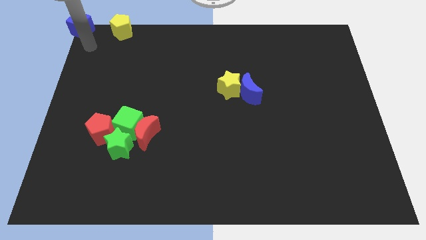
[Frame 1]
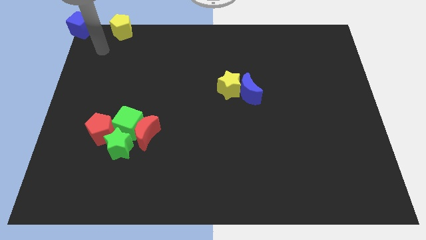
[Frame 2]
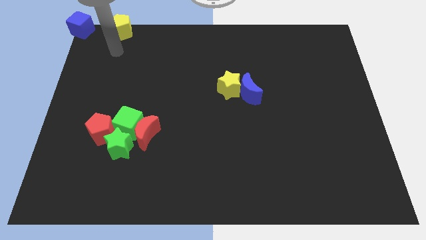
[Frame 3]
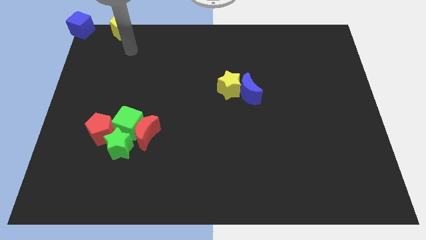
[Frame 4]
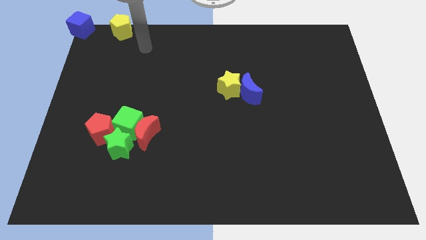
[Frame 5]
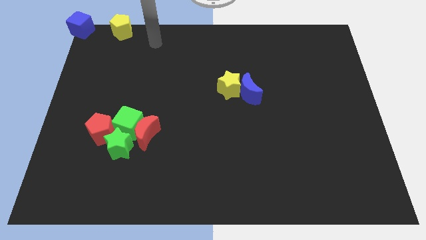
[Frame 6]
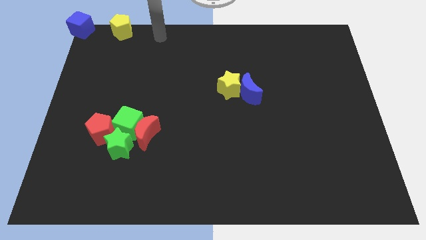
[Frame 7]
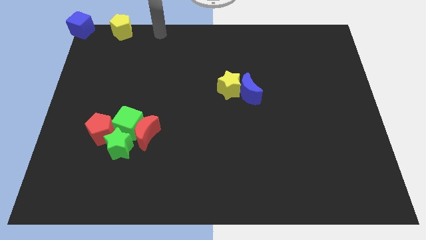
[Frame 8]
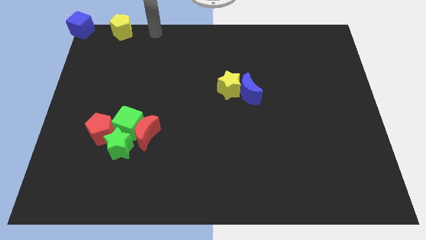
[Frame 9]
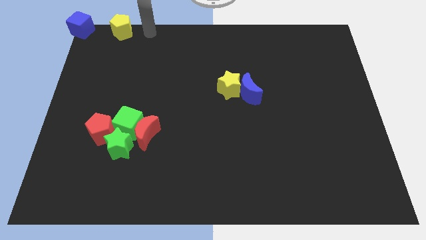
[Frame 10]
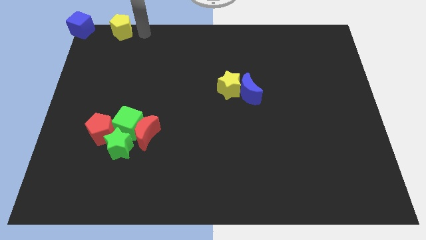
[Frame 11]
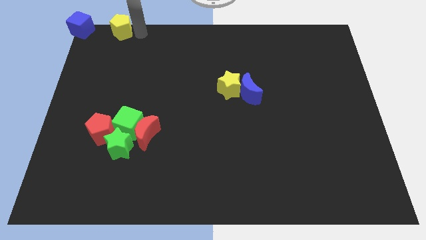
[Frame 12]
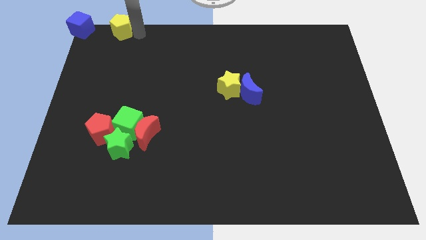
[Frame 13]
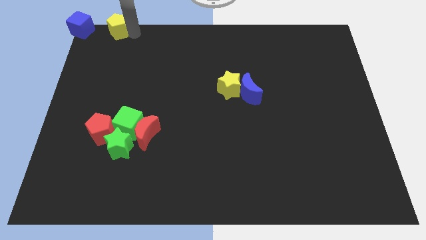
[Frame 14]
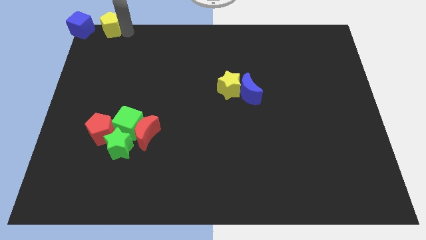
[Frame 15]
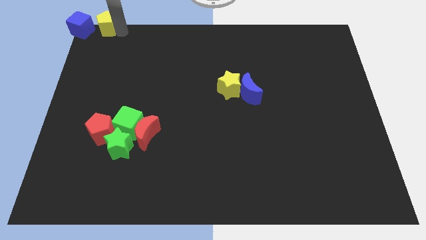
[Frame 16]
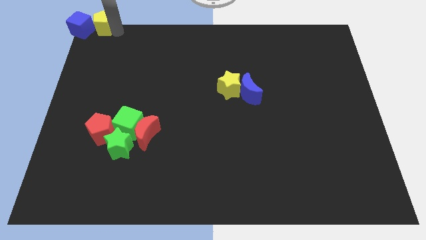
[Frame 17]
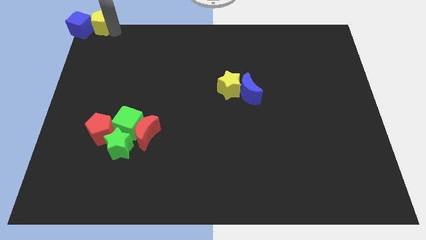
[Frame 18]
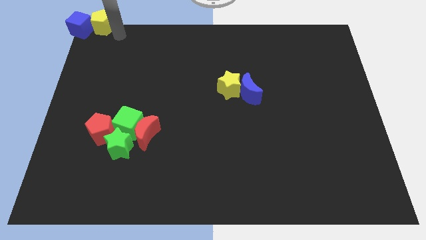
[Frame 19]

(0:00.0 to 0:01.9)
move the yellow pentagon to the right side of the blue cube

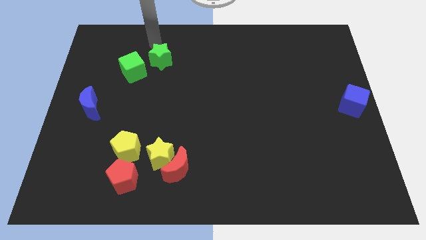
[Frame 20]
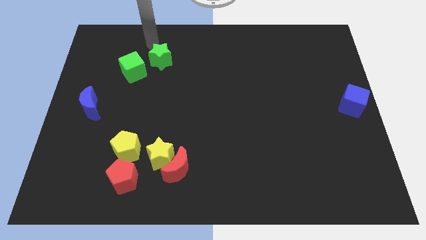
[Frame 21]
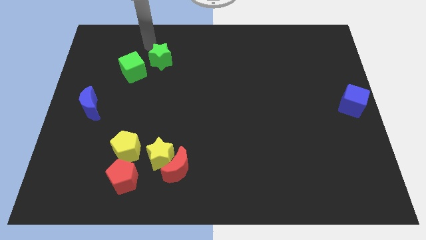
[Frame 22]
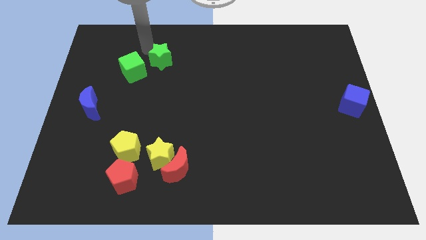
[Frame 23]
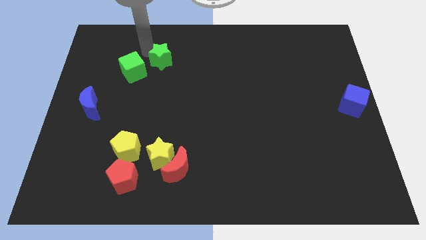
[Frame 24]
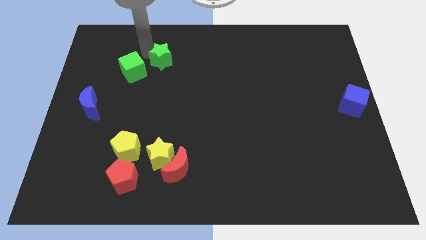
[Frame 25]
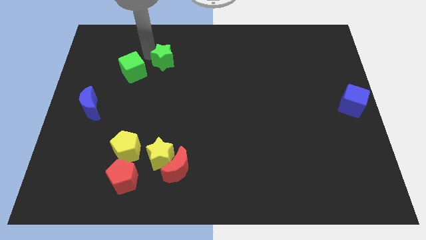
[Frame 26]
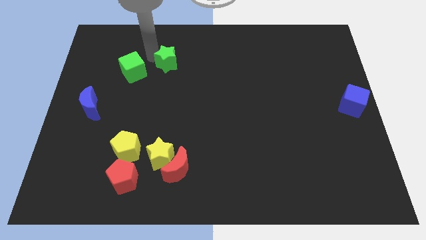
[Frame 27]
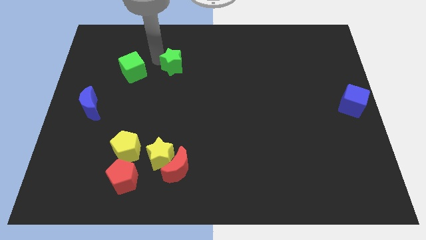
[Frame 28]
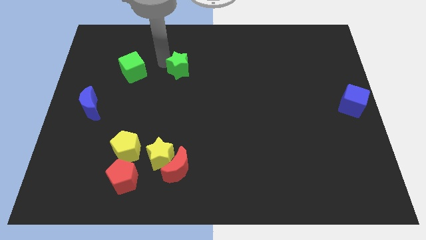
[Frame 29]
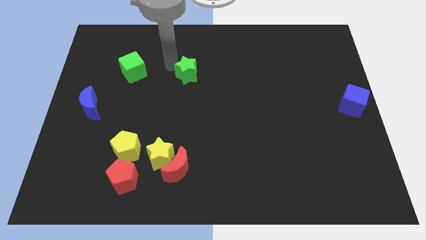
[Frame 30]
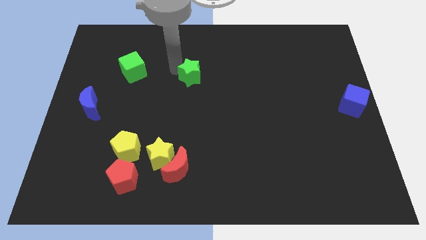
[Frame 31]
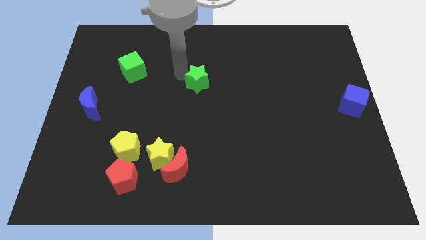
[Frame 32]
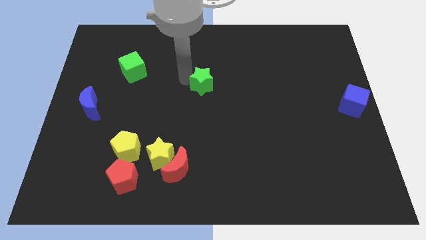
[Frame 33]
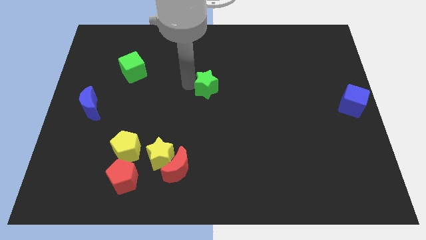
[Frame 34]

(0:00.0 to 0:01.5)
push the green star towards the center of the board

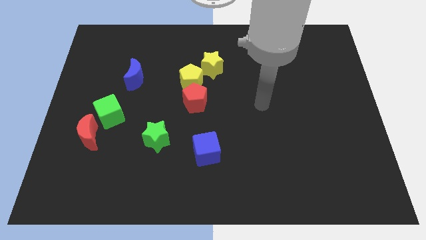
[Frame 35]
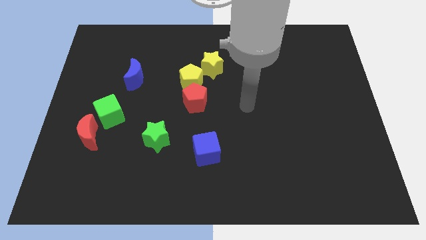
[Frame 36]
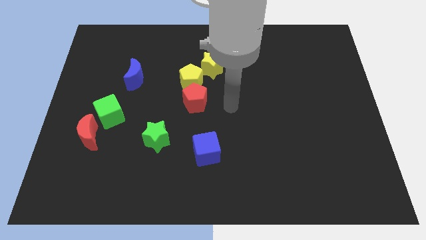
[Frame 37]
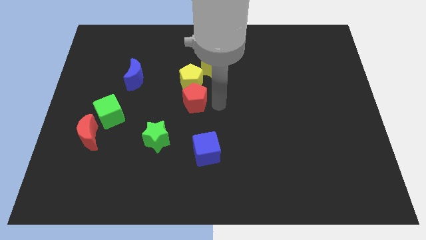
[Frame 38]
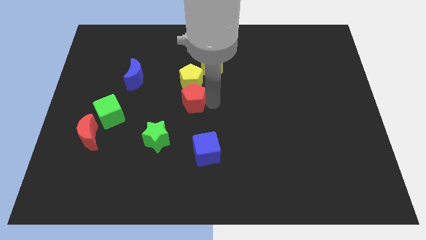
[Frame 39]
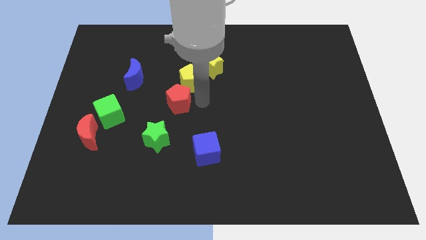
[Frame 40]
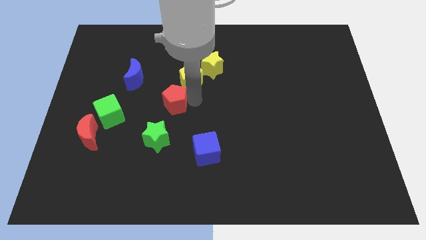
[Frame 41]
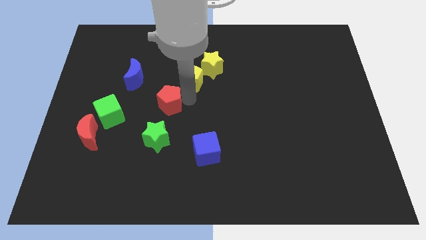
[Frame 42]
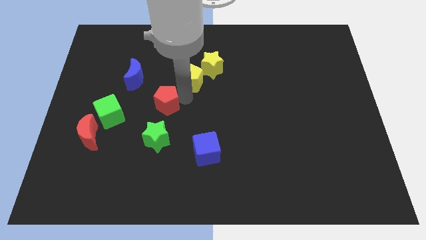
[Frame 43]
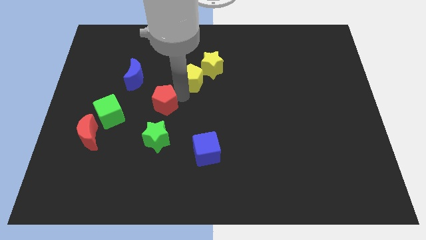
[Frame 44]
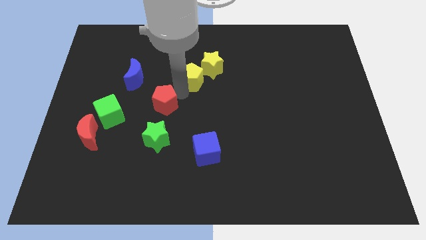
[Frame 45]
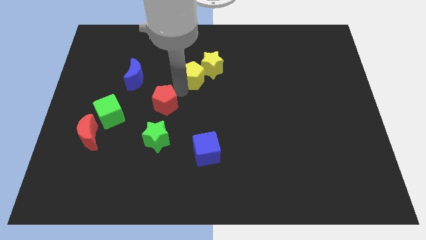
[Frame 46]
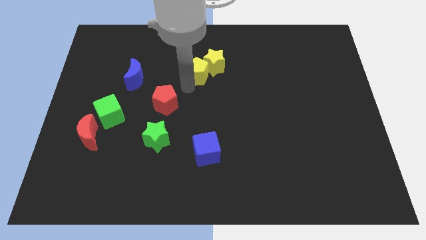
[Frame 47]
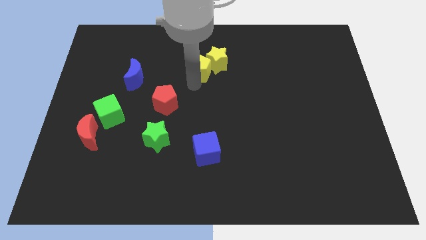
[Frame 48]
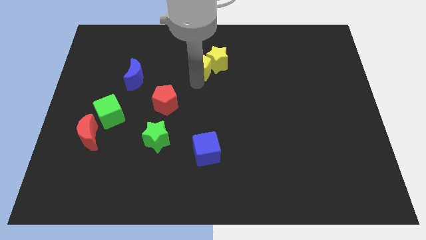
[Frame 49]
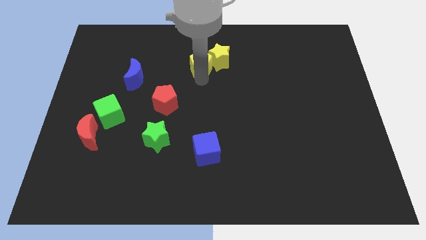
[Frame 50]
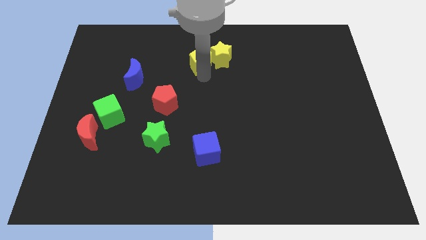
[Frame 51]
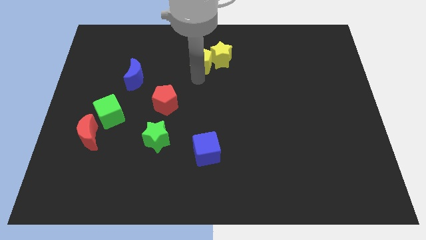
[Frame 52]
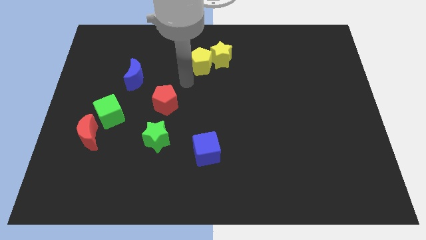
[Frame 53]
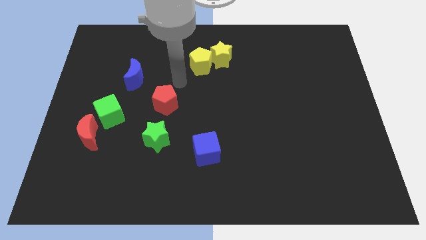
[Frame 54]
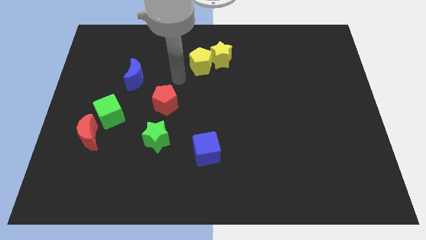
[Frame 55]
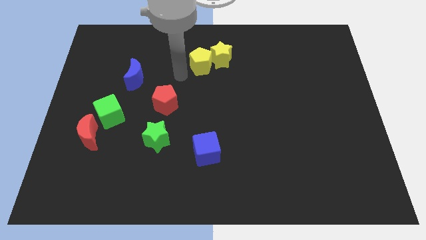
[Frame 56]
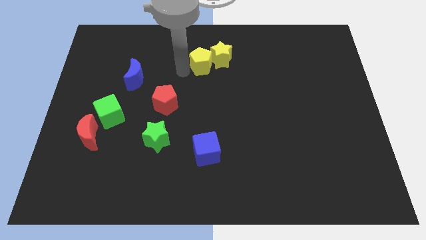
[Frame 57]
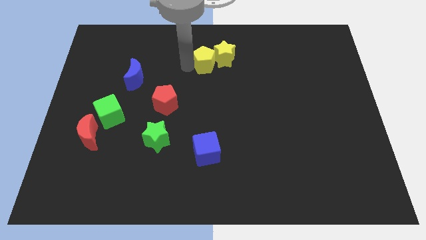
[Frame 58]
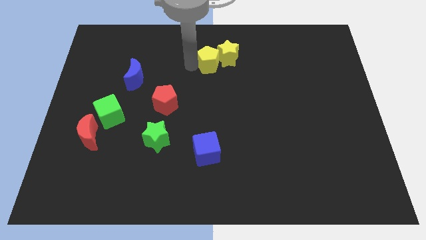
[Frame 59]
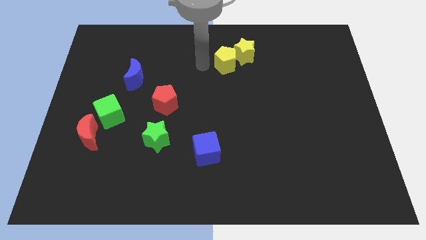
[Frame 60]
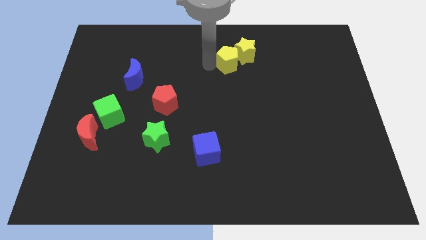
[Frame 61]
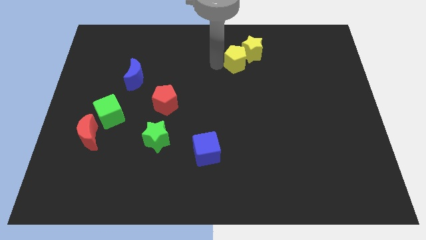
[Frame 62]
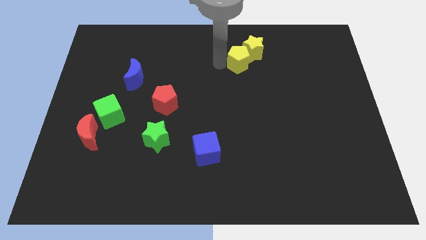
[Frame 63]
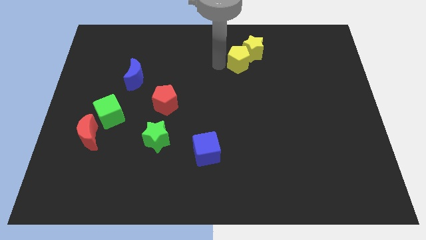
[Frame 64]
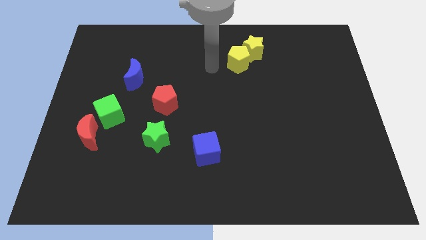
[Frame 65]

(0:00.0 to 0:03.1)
slide the yellow blocks to the top side of the table

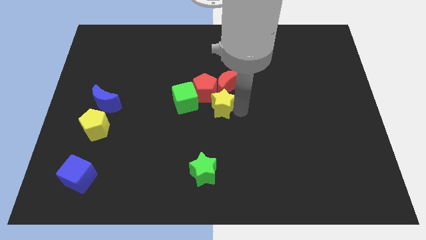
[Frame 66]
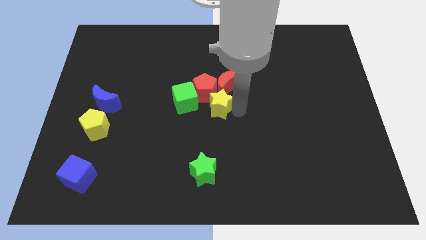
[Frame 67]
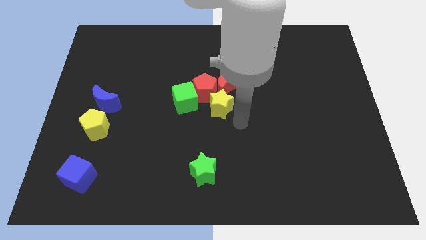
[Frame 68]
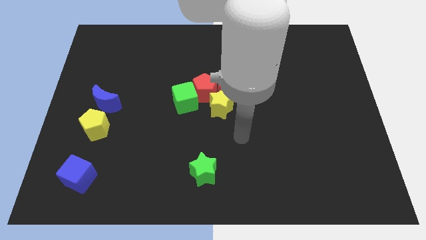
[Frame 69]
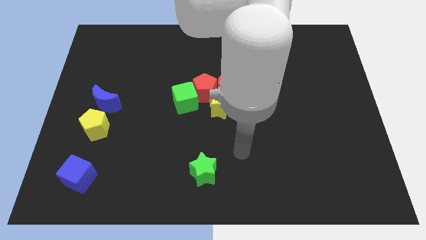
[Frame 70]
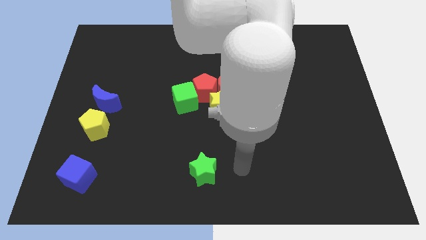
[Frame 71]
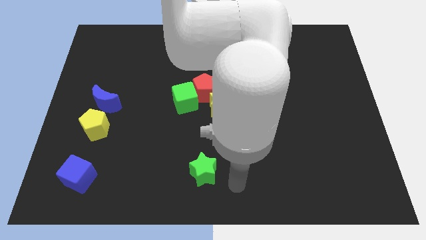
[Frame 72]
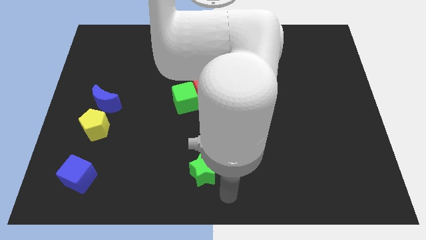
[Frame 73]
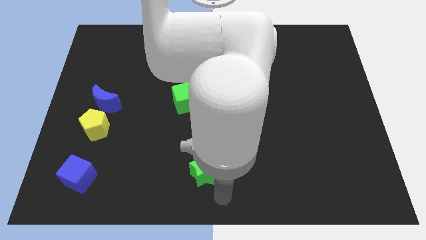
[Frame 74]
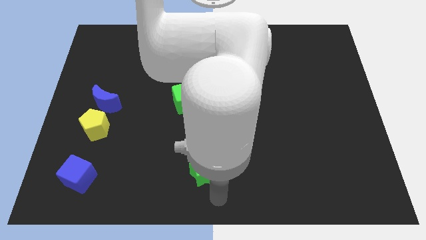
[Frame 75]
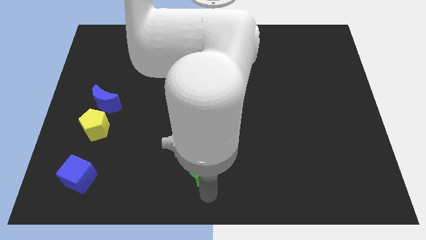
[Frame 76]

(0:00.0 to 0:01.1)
move your arm to the bottom of the green star

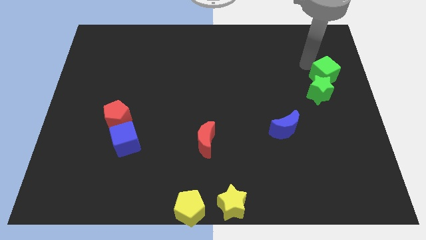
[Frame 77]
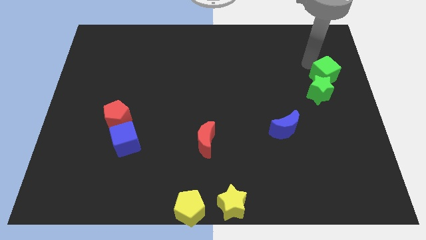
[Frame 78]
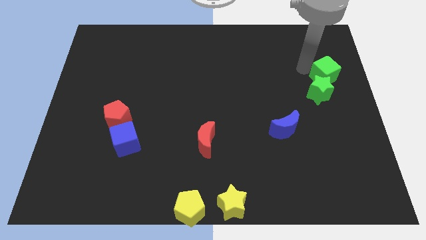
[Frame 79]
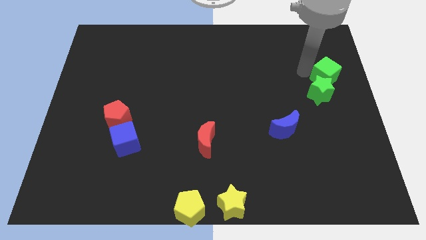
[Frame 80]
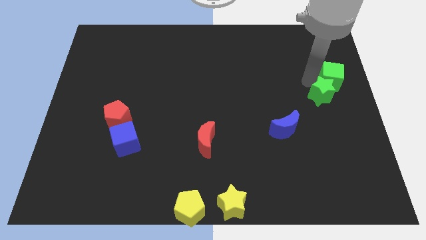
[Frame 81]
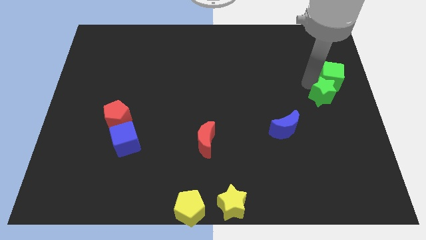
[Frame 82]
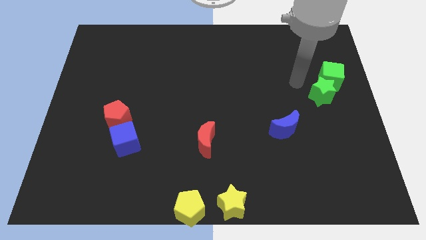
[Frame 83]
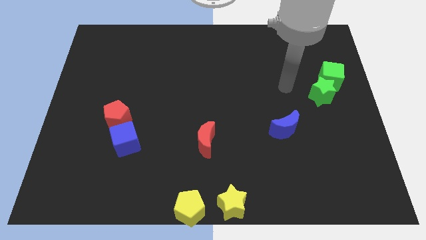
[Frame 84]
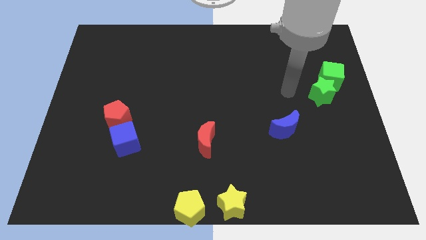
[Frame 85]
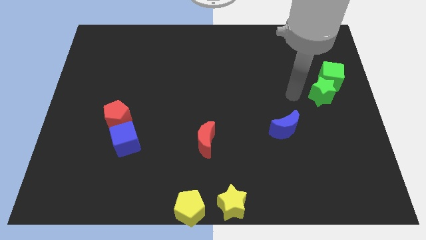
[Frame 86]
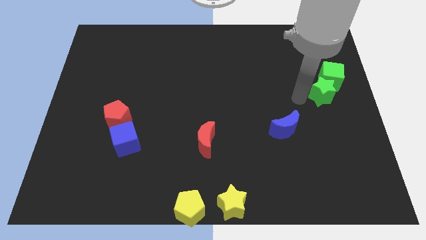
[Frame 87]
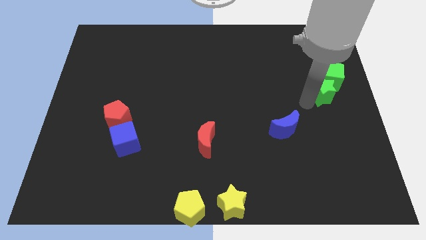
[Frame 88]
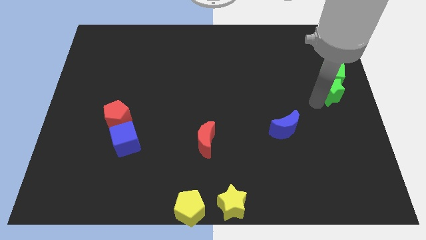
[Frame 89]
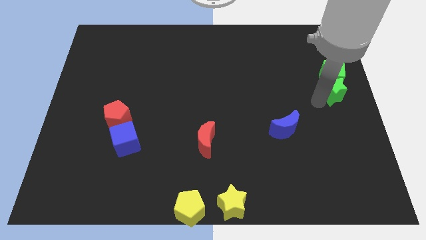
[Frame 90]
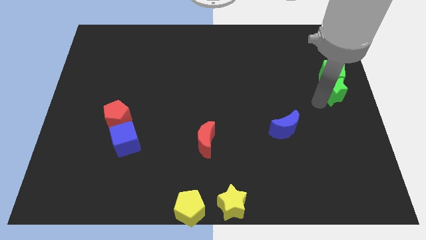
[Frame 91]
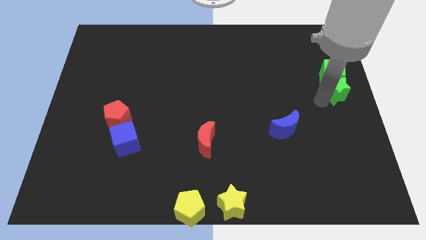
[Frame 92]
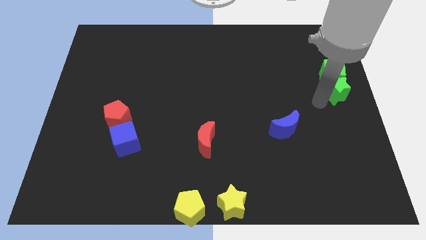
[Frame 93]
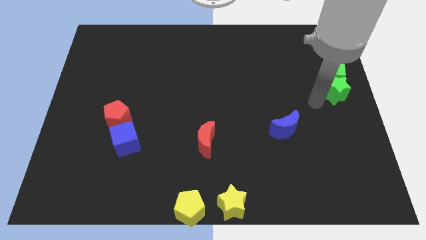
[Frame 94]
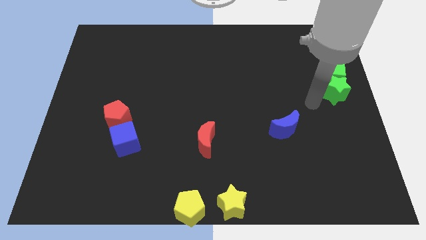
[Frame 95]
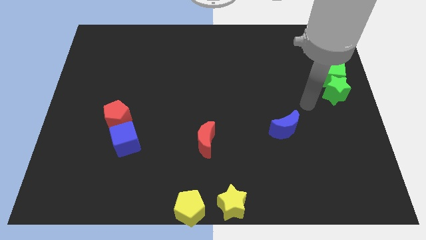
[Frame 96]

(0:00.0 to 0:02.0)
place green star and green cube to the right center of the board
